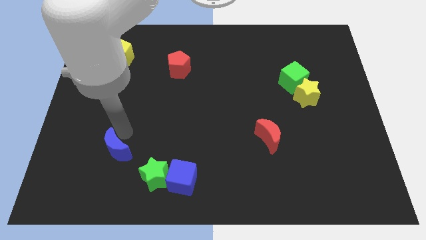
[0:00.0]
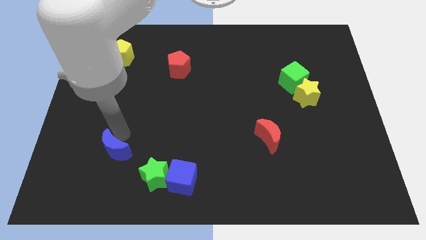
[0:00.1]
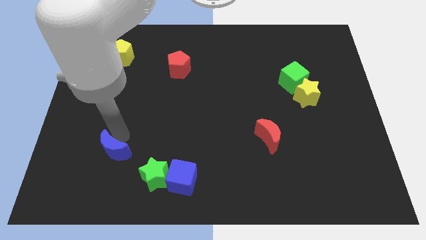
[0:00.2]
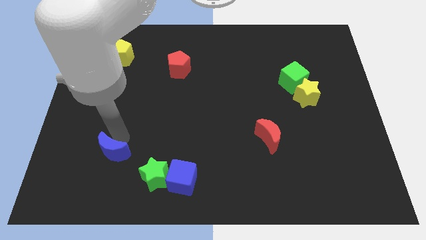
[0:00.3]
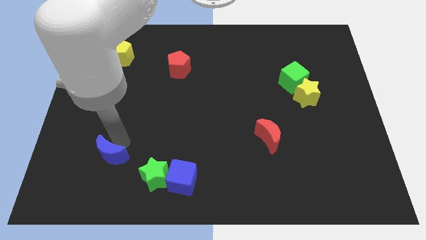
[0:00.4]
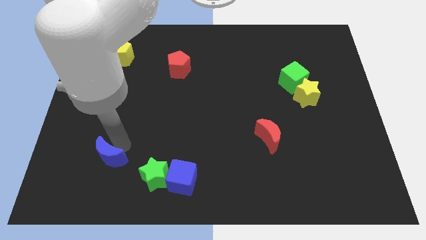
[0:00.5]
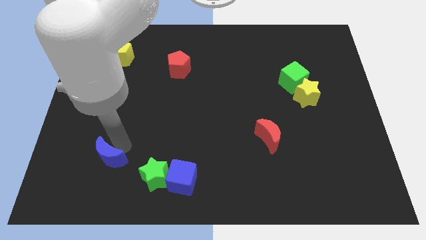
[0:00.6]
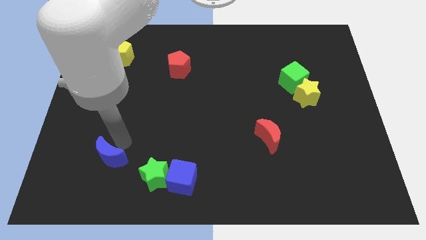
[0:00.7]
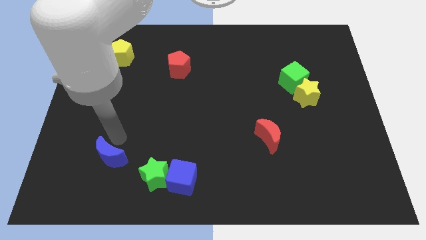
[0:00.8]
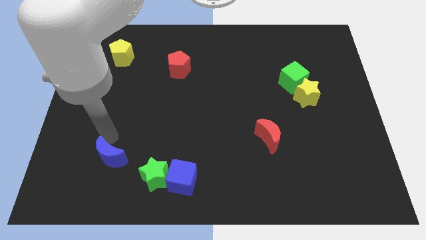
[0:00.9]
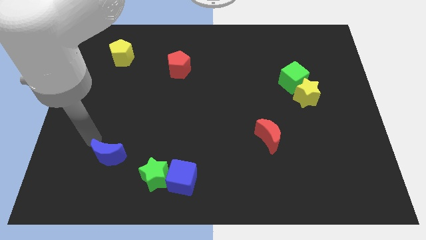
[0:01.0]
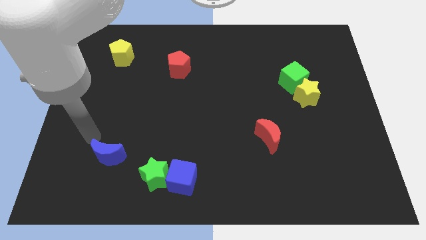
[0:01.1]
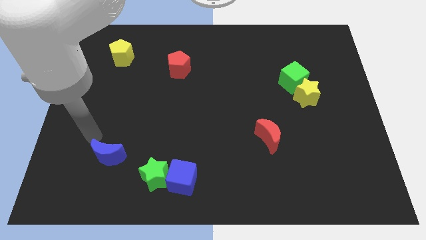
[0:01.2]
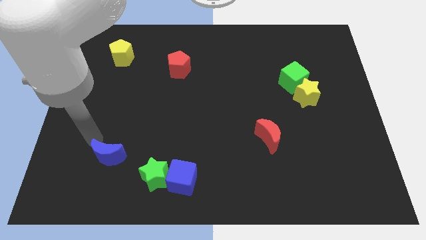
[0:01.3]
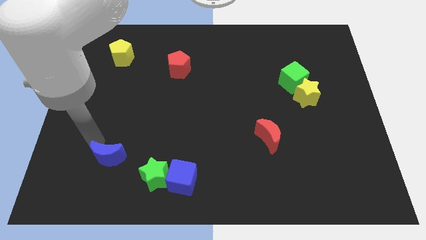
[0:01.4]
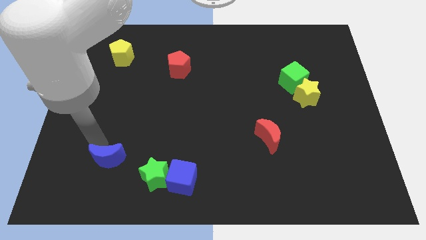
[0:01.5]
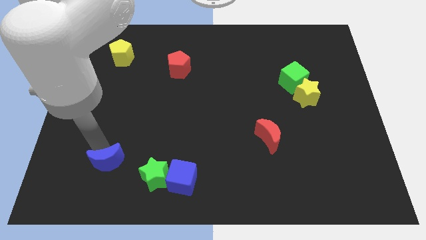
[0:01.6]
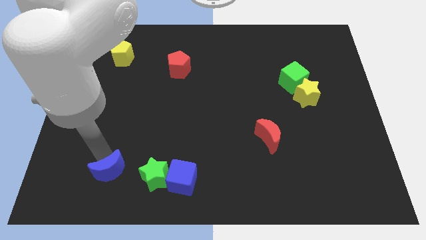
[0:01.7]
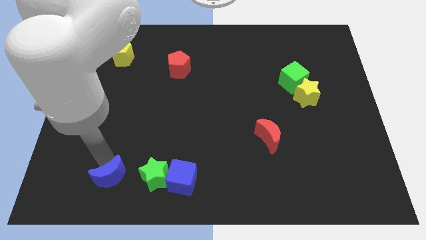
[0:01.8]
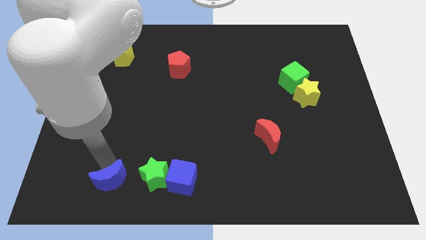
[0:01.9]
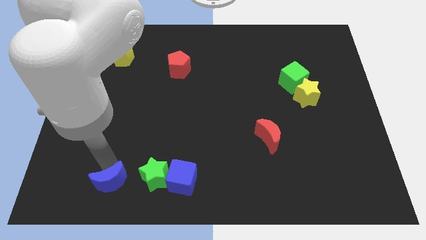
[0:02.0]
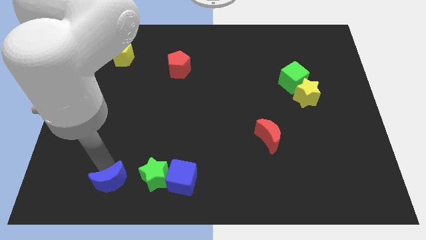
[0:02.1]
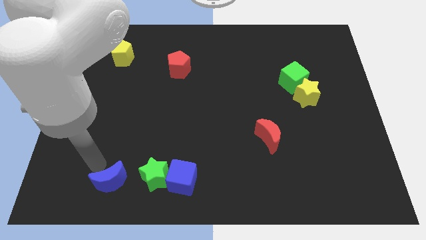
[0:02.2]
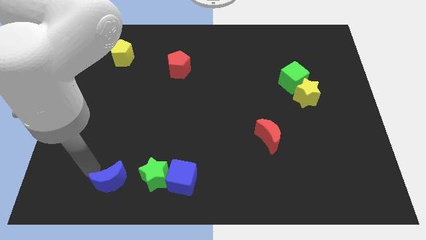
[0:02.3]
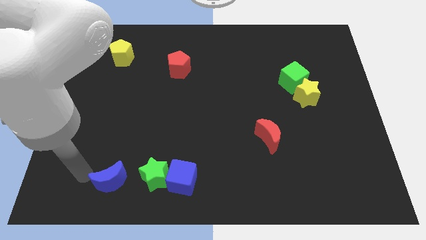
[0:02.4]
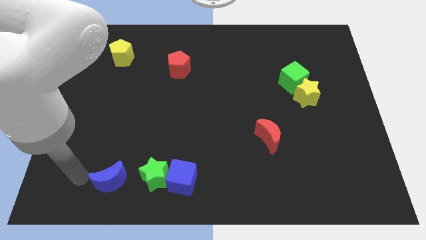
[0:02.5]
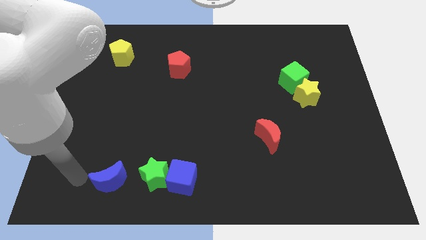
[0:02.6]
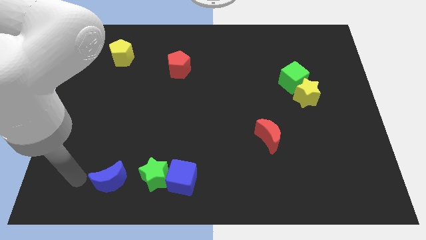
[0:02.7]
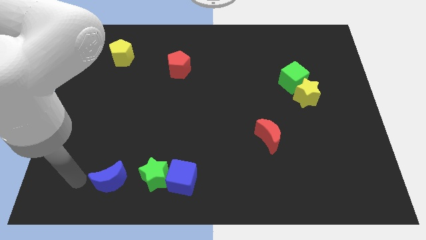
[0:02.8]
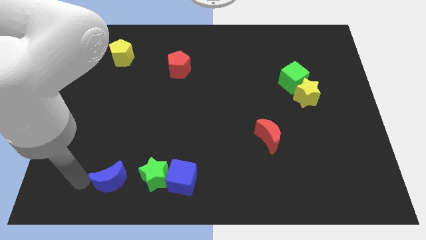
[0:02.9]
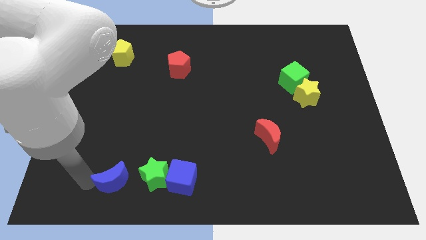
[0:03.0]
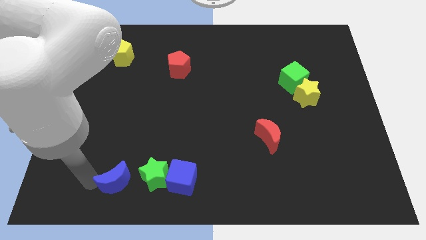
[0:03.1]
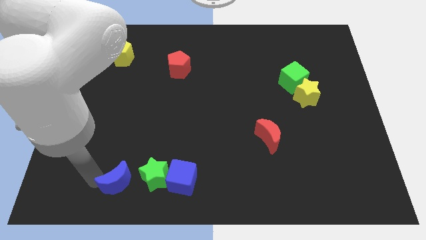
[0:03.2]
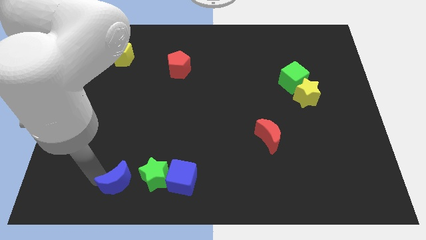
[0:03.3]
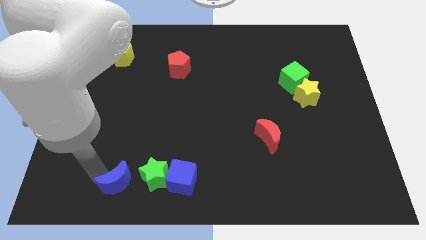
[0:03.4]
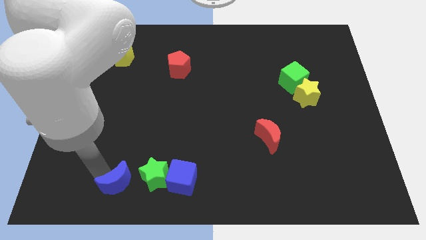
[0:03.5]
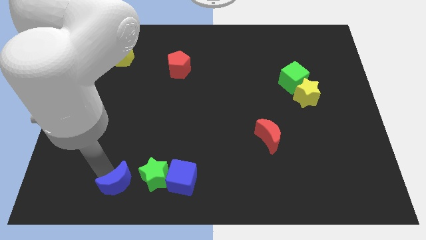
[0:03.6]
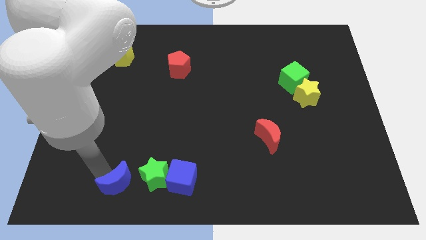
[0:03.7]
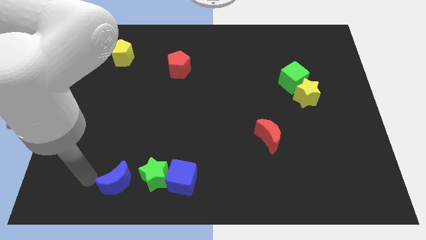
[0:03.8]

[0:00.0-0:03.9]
place blue moon left to the green star

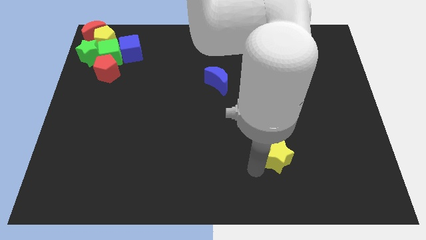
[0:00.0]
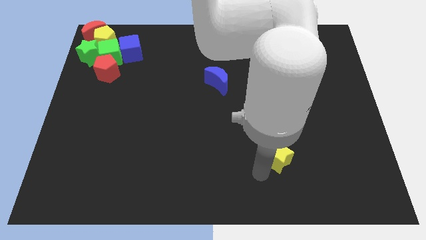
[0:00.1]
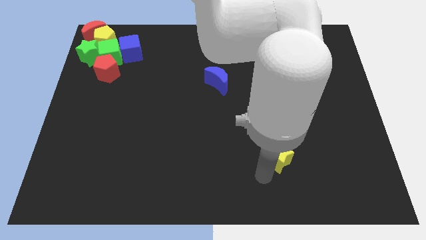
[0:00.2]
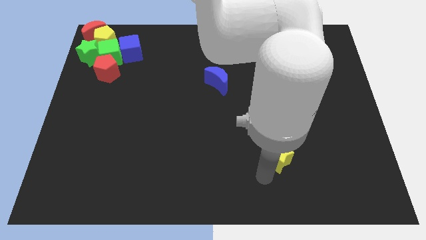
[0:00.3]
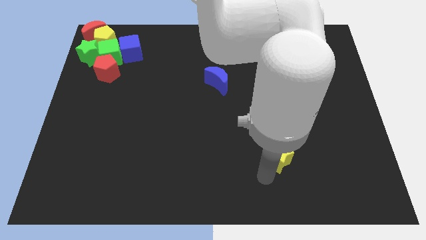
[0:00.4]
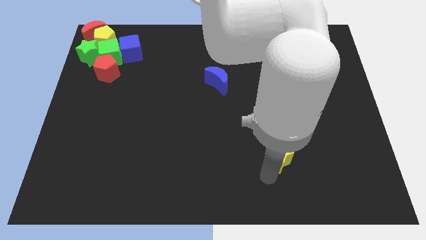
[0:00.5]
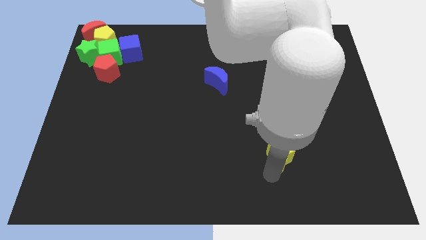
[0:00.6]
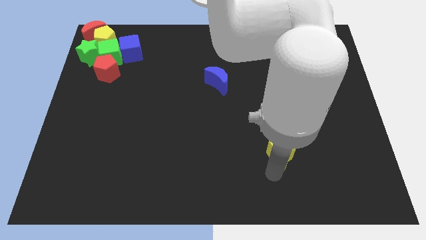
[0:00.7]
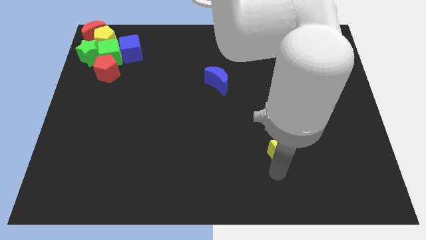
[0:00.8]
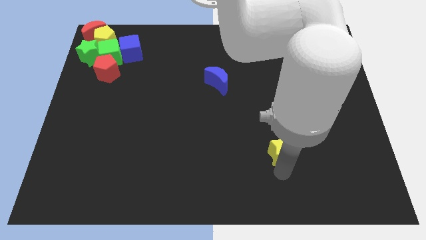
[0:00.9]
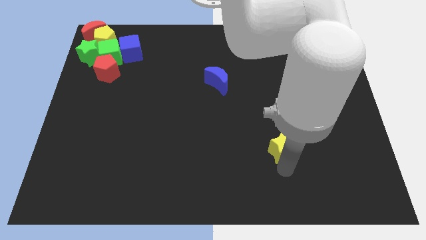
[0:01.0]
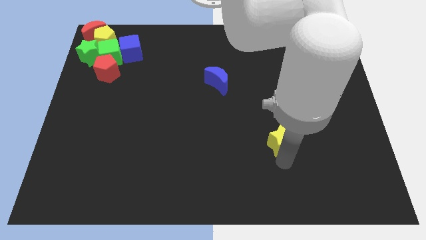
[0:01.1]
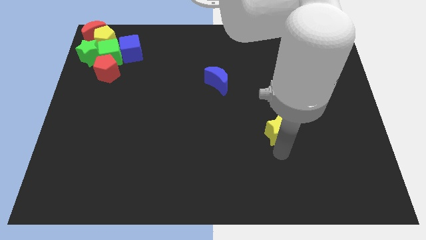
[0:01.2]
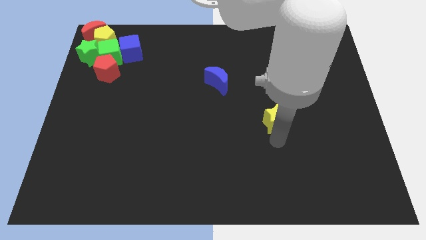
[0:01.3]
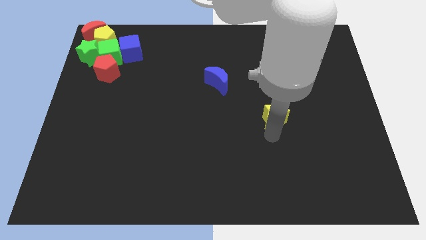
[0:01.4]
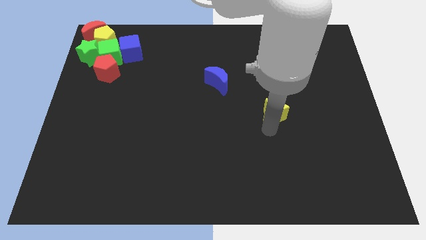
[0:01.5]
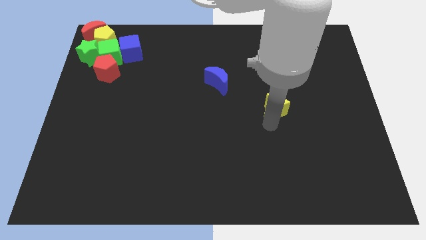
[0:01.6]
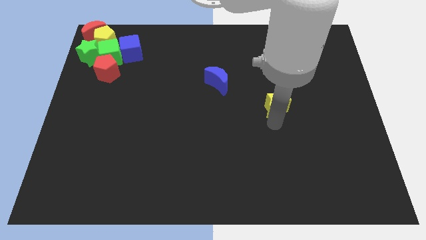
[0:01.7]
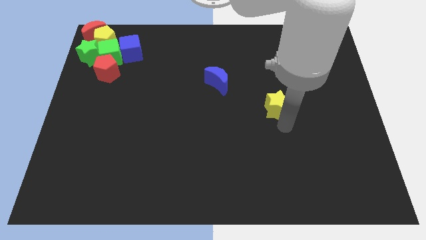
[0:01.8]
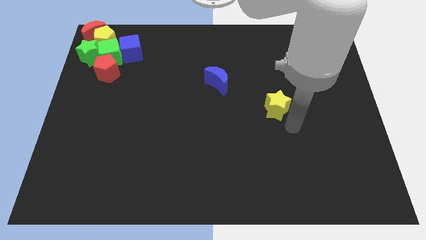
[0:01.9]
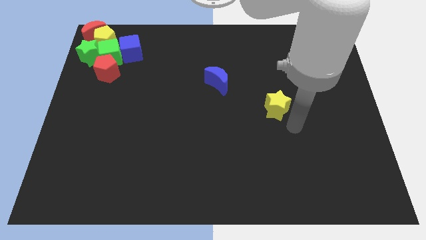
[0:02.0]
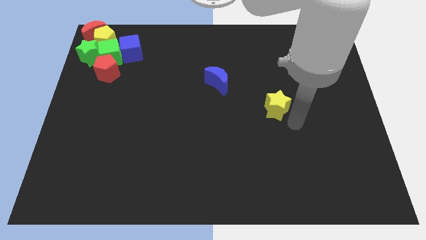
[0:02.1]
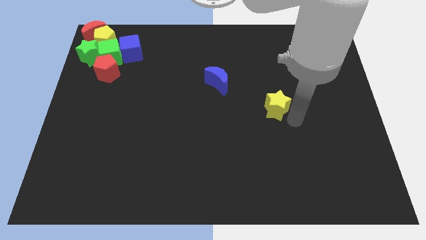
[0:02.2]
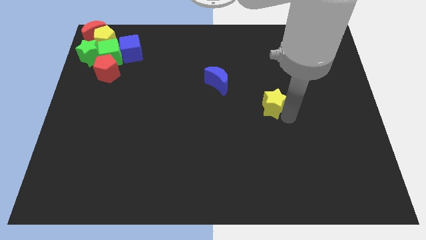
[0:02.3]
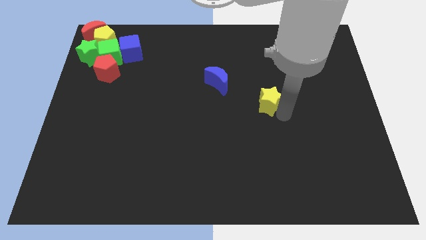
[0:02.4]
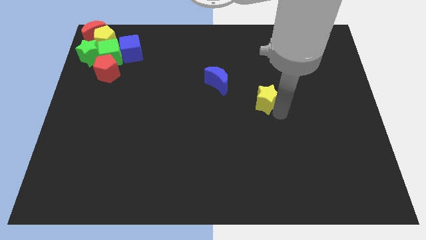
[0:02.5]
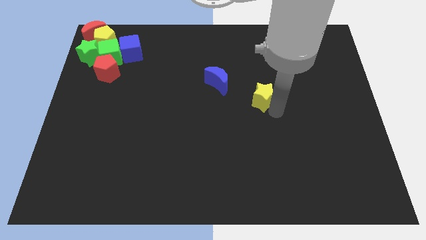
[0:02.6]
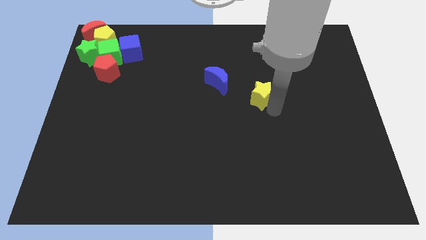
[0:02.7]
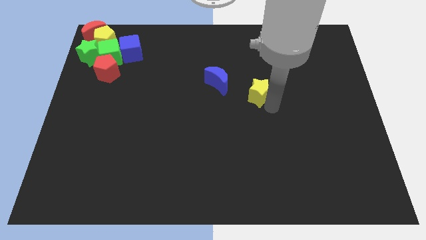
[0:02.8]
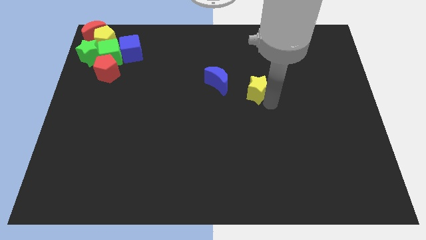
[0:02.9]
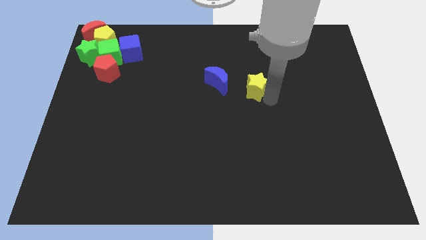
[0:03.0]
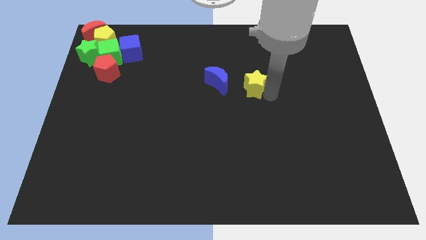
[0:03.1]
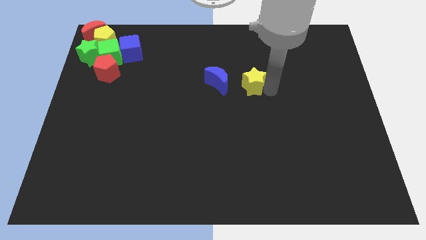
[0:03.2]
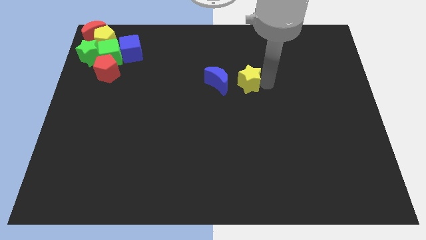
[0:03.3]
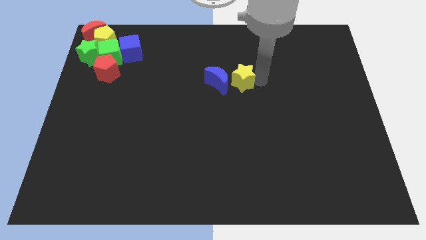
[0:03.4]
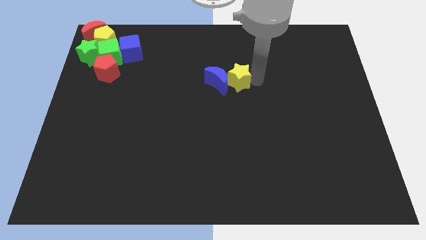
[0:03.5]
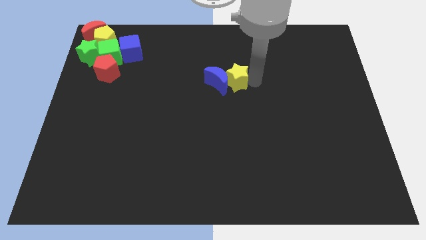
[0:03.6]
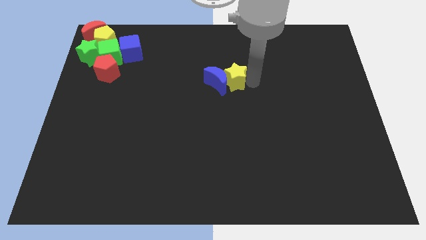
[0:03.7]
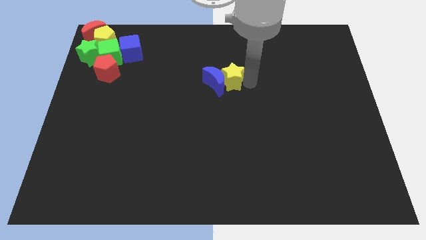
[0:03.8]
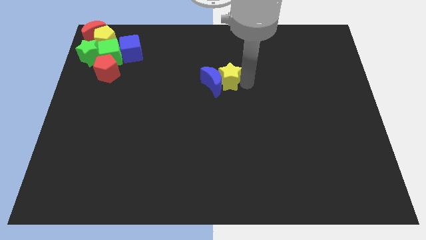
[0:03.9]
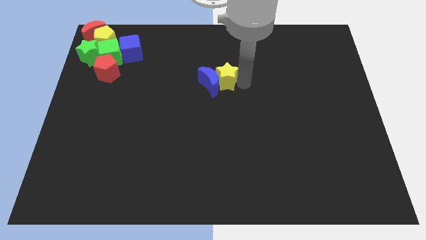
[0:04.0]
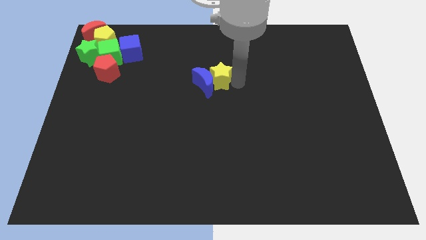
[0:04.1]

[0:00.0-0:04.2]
move yellow star right beside the blue moon

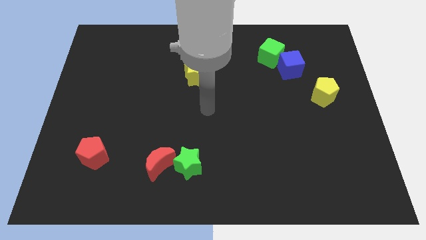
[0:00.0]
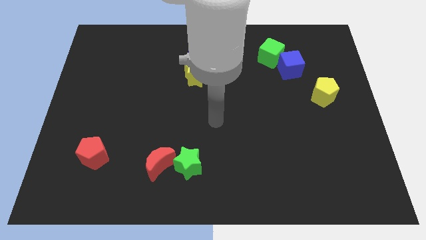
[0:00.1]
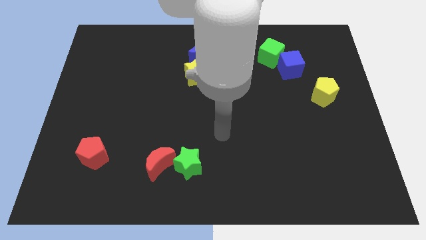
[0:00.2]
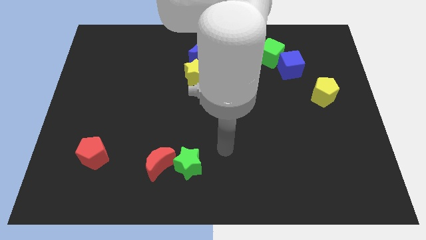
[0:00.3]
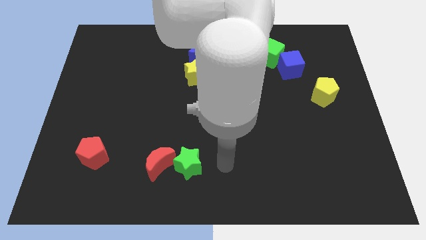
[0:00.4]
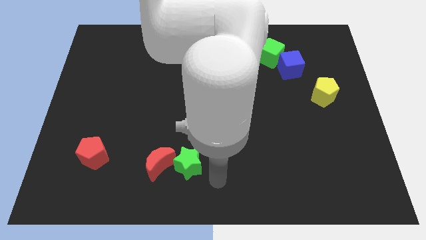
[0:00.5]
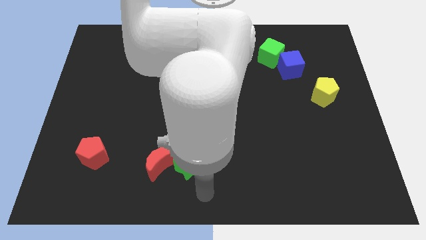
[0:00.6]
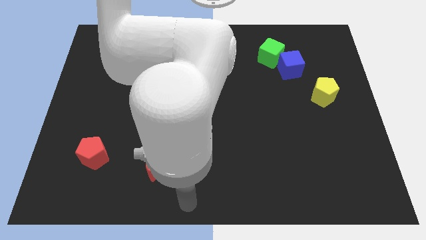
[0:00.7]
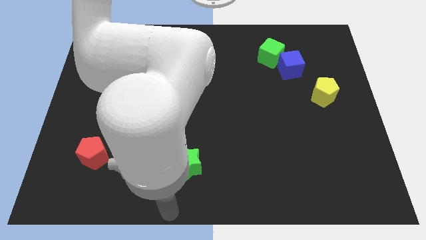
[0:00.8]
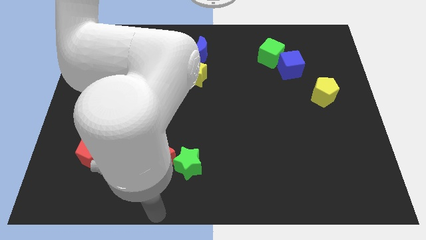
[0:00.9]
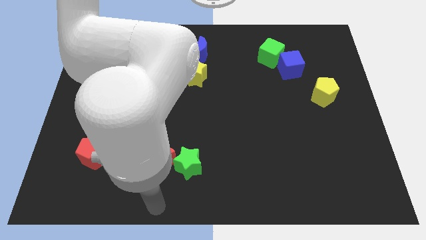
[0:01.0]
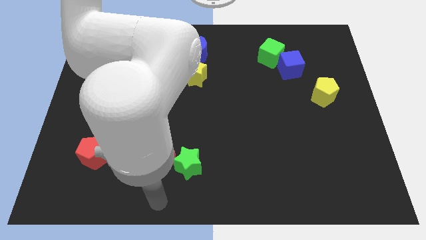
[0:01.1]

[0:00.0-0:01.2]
move your hand away from yellow star
